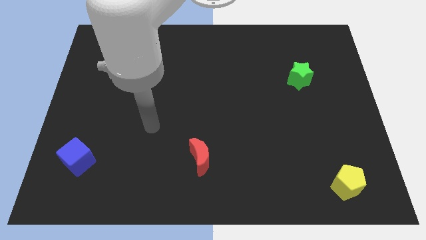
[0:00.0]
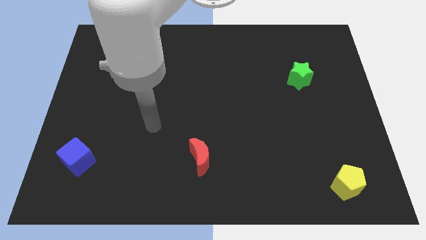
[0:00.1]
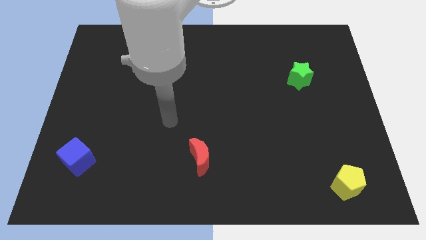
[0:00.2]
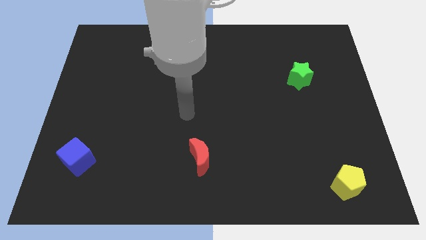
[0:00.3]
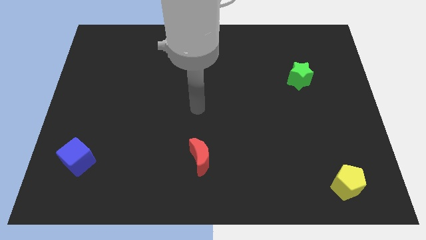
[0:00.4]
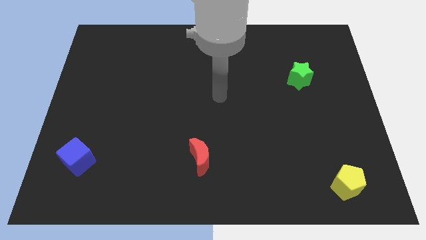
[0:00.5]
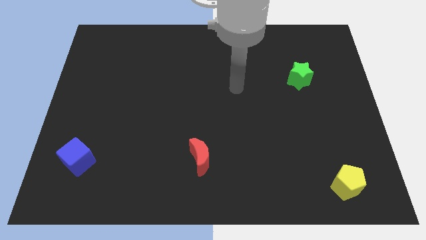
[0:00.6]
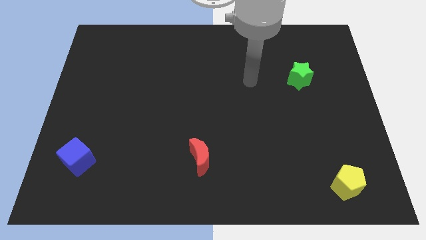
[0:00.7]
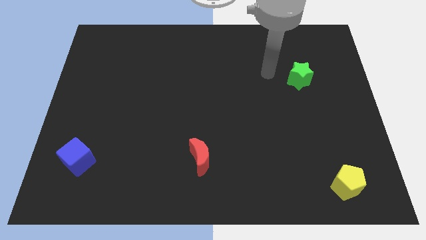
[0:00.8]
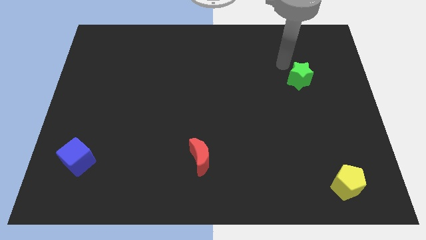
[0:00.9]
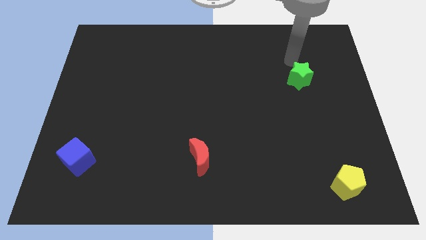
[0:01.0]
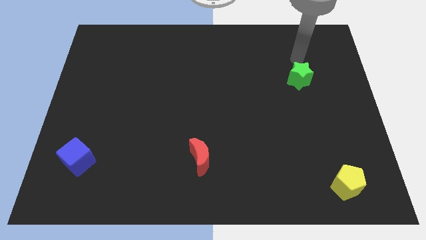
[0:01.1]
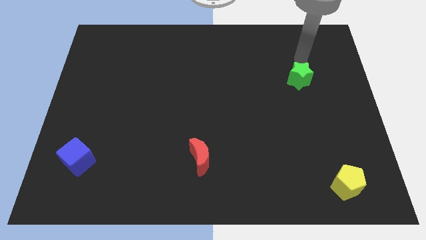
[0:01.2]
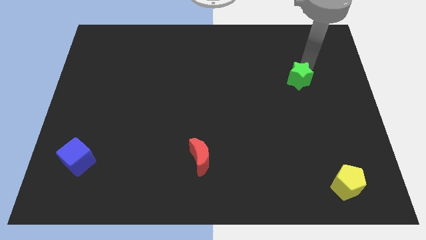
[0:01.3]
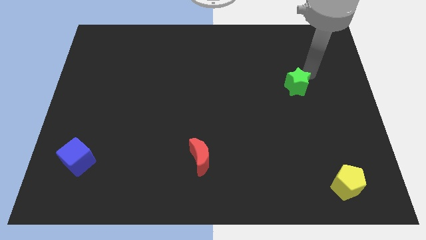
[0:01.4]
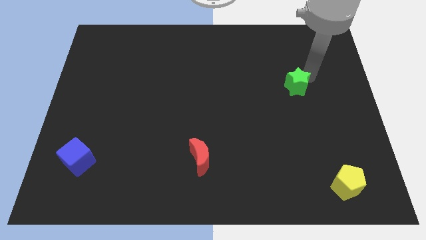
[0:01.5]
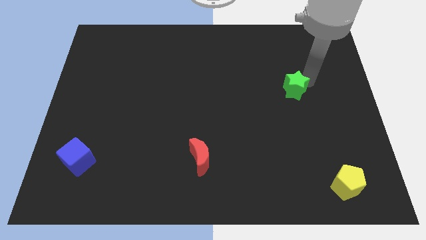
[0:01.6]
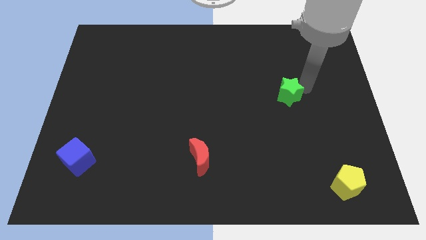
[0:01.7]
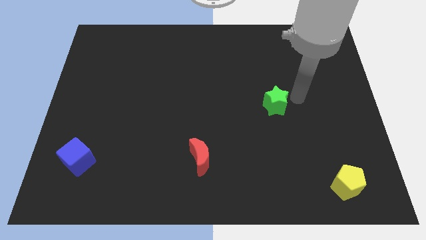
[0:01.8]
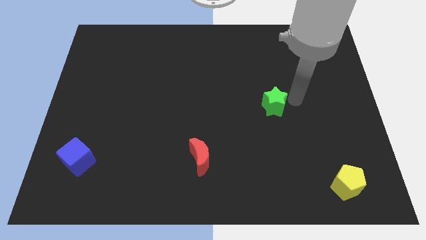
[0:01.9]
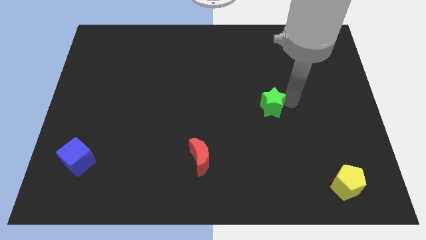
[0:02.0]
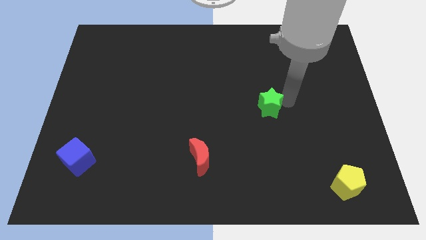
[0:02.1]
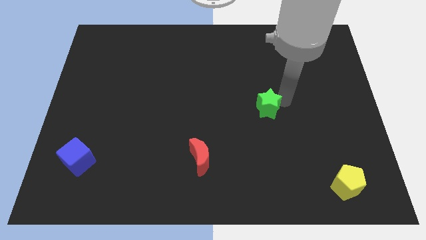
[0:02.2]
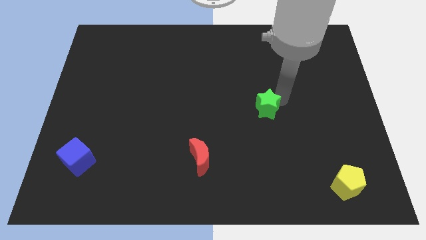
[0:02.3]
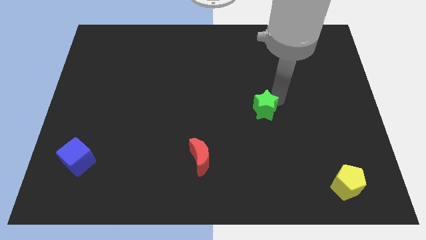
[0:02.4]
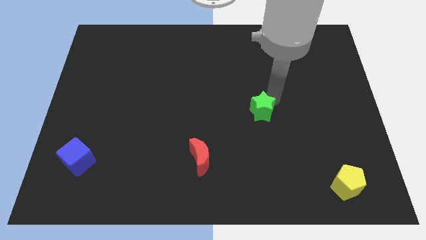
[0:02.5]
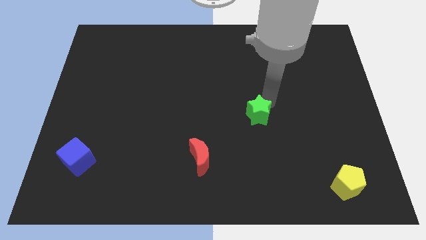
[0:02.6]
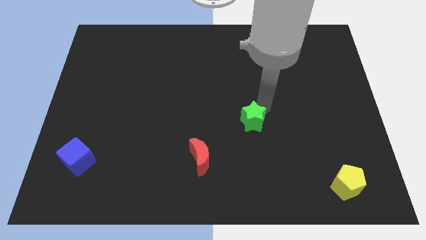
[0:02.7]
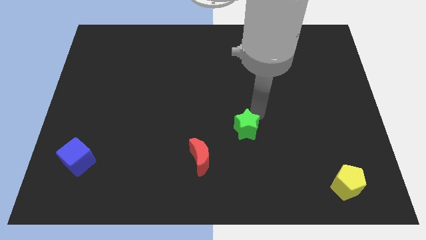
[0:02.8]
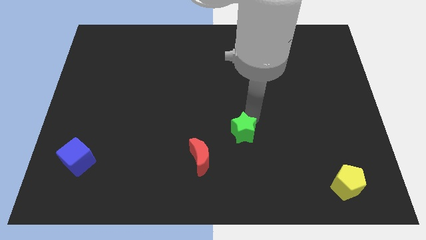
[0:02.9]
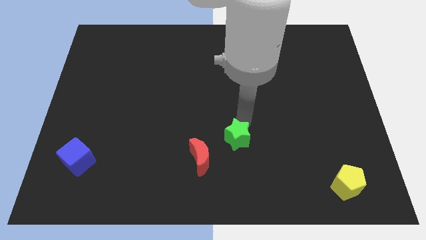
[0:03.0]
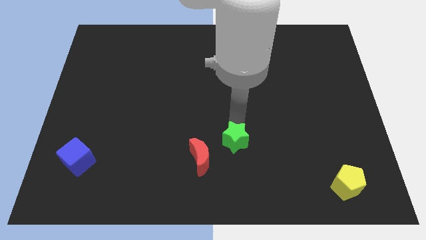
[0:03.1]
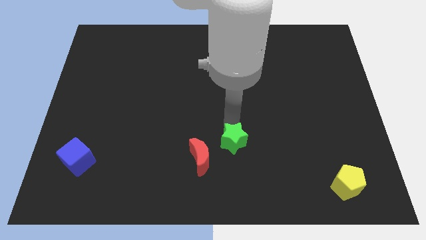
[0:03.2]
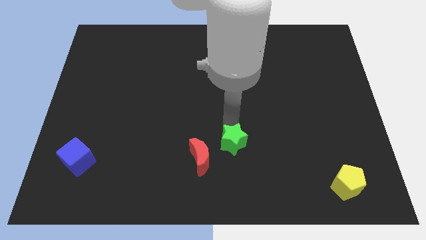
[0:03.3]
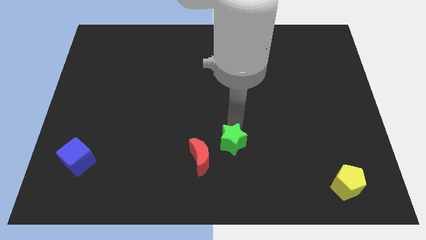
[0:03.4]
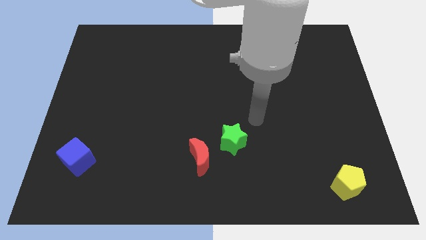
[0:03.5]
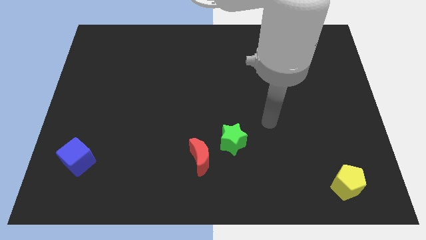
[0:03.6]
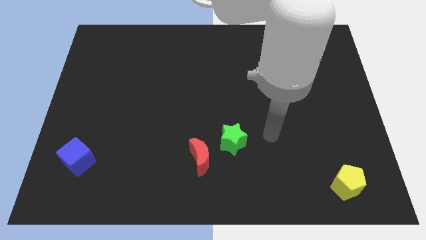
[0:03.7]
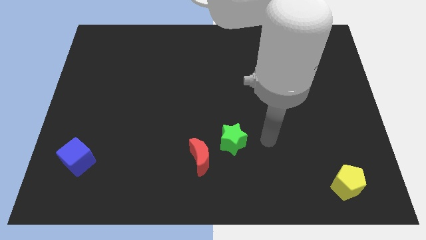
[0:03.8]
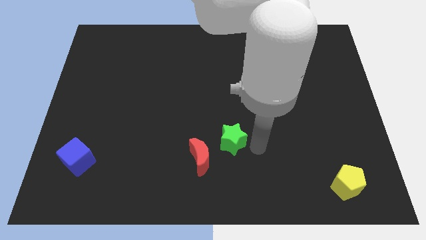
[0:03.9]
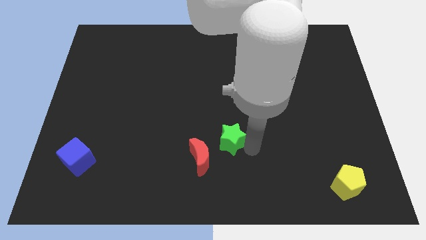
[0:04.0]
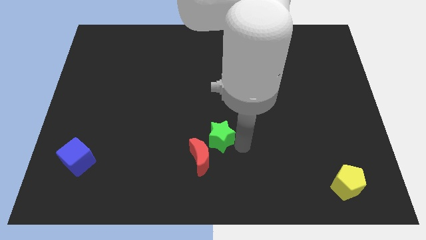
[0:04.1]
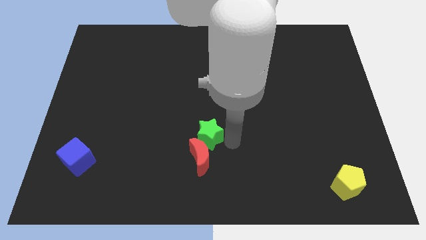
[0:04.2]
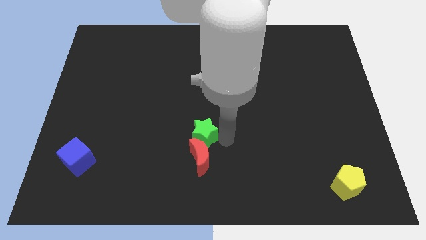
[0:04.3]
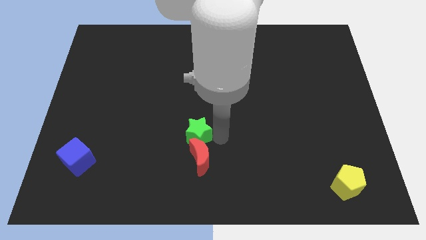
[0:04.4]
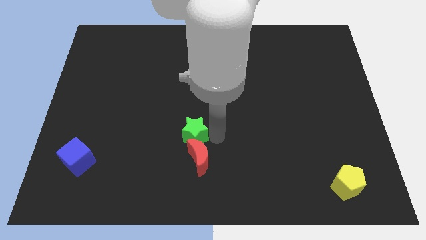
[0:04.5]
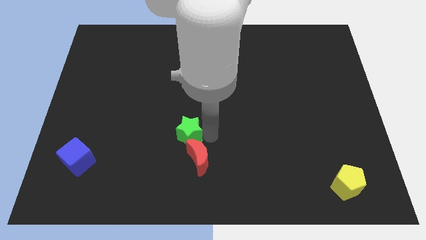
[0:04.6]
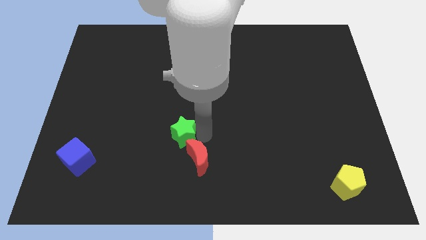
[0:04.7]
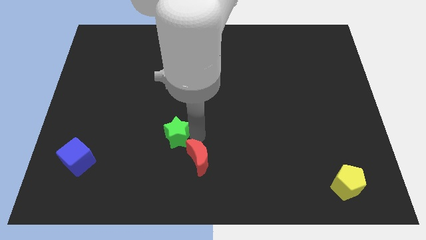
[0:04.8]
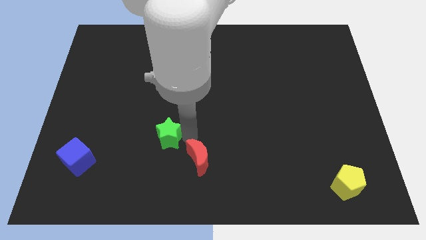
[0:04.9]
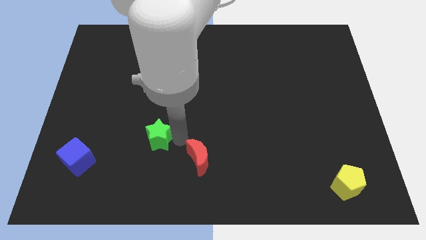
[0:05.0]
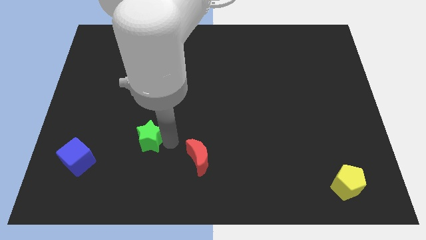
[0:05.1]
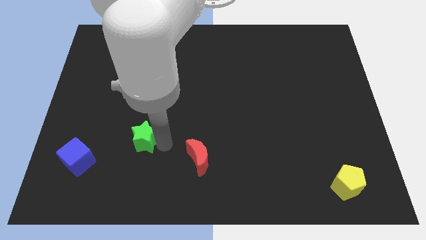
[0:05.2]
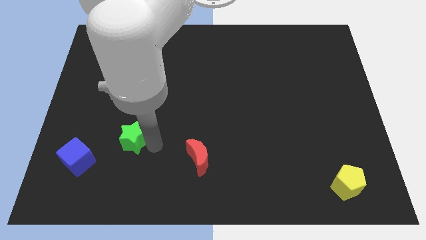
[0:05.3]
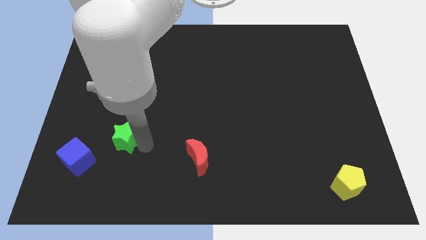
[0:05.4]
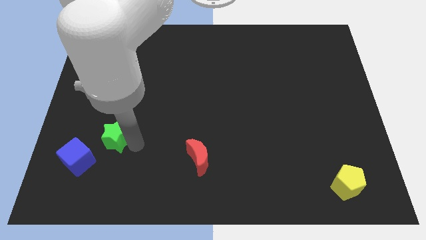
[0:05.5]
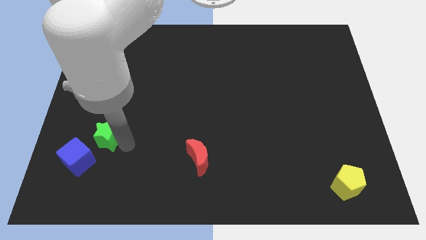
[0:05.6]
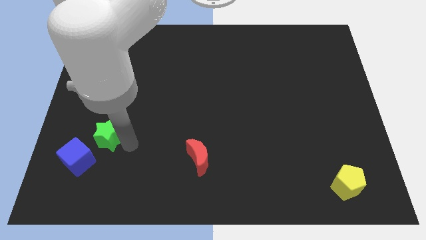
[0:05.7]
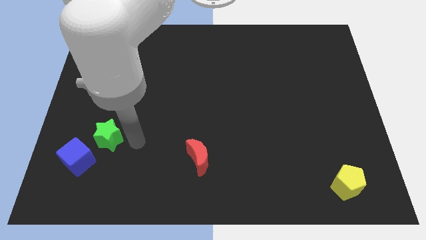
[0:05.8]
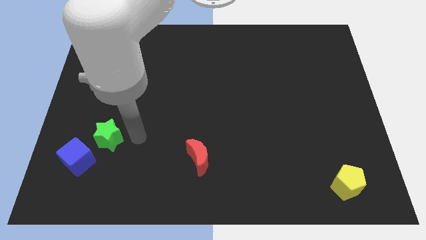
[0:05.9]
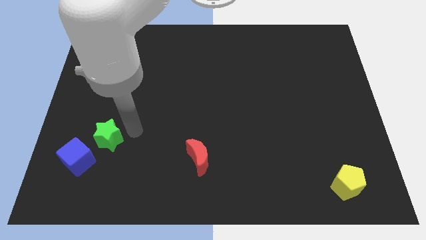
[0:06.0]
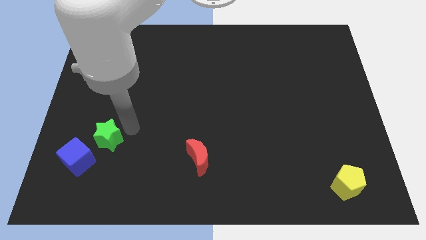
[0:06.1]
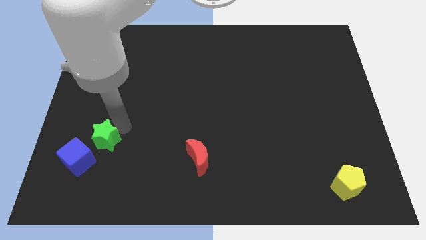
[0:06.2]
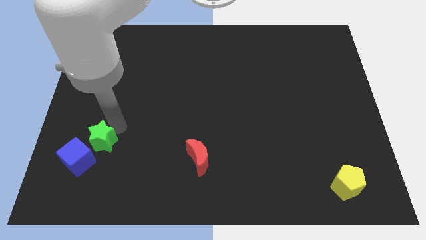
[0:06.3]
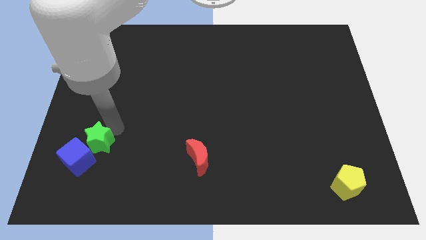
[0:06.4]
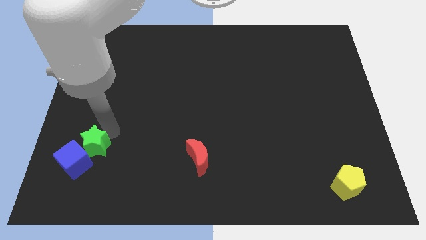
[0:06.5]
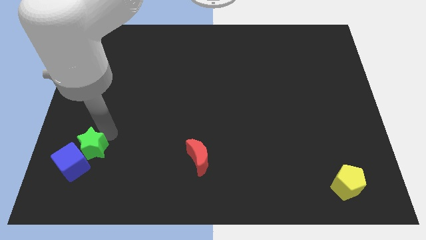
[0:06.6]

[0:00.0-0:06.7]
push the star towards the cube

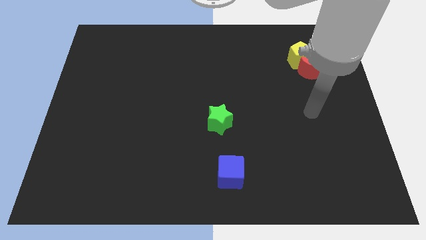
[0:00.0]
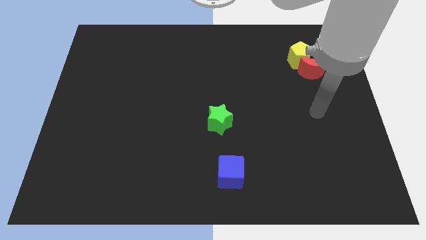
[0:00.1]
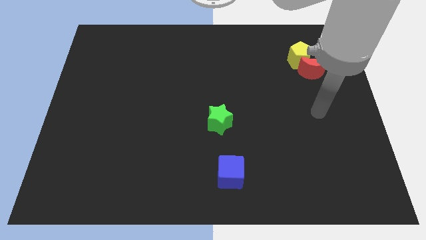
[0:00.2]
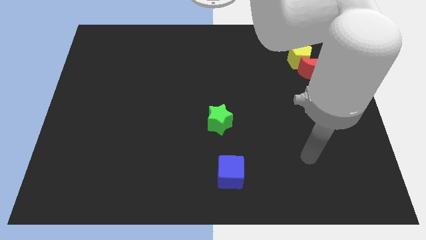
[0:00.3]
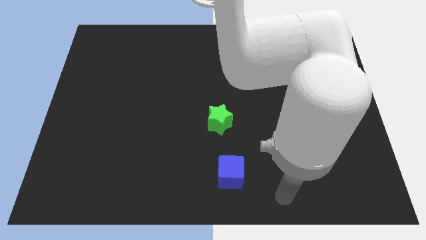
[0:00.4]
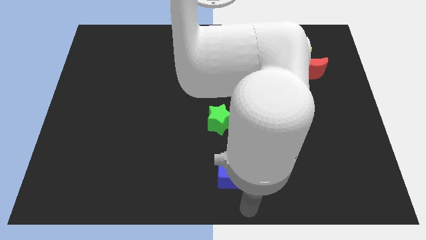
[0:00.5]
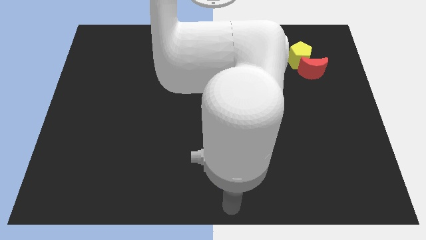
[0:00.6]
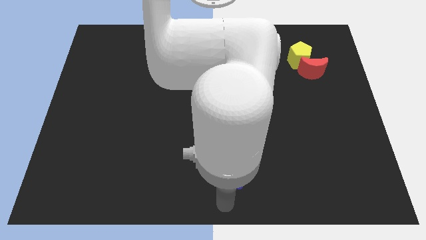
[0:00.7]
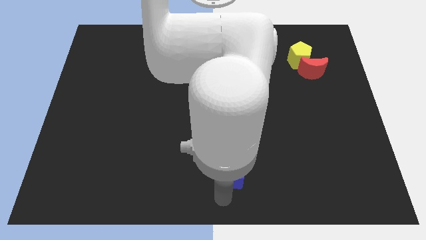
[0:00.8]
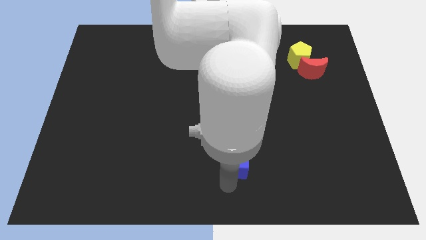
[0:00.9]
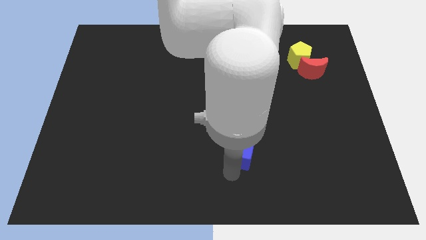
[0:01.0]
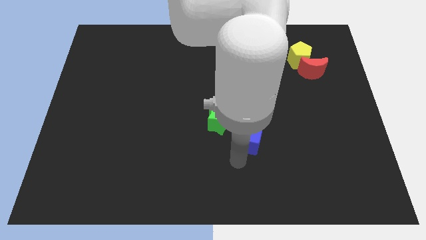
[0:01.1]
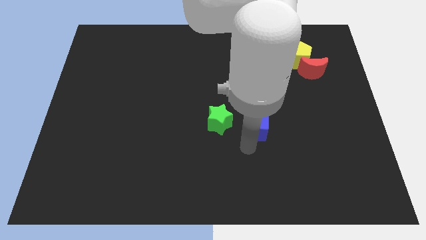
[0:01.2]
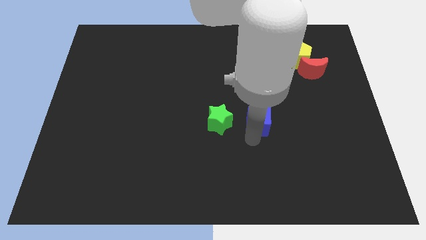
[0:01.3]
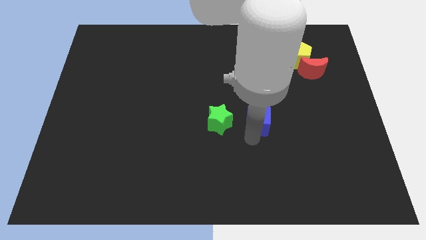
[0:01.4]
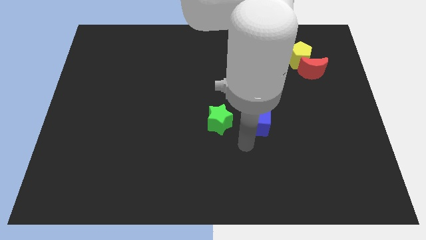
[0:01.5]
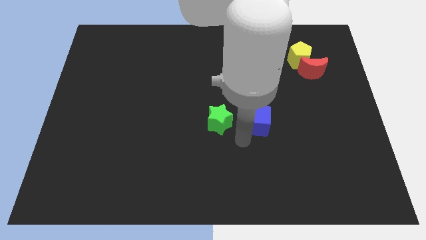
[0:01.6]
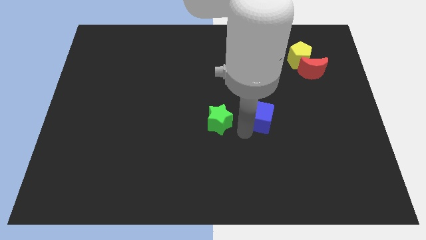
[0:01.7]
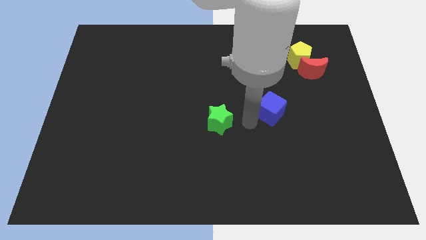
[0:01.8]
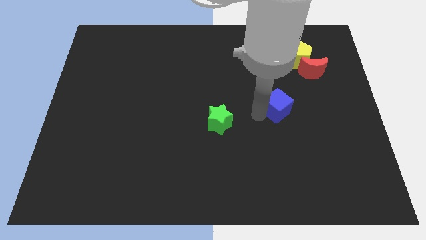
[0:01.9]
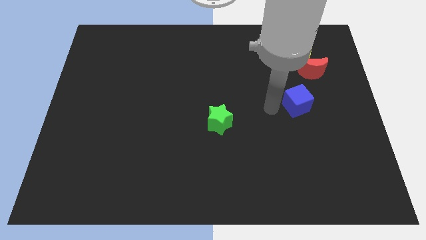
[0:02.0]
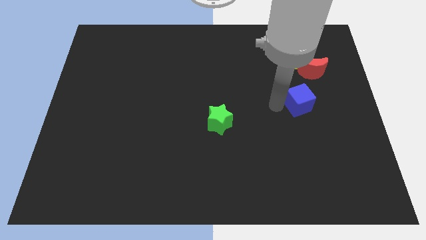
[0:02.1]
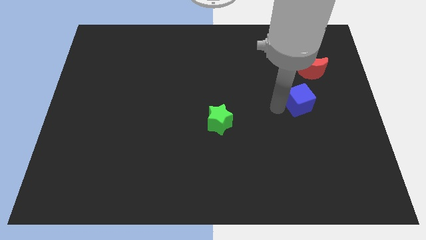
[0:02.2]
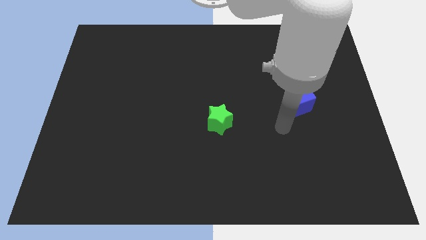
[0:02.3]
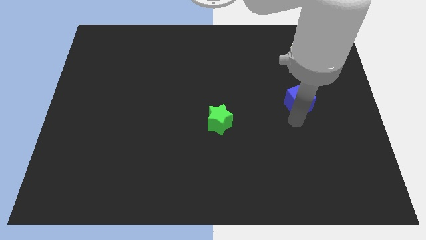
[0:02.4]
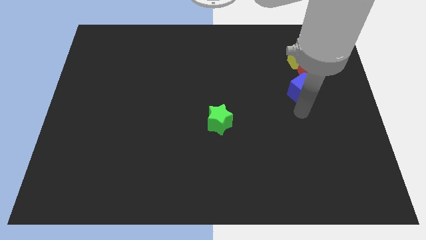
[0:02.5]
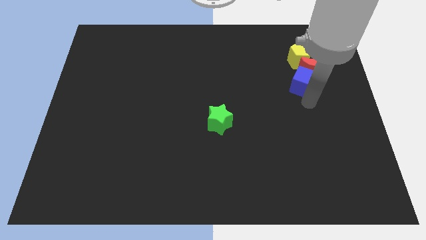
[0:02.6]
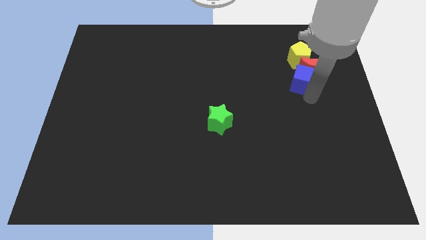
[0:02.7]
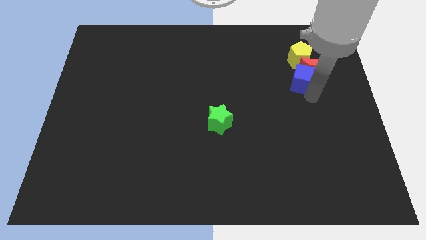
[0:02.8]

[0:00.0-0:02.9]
move the cube to the red block
